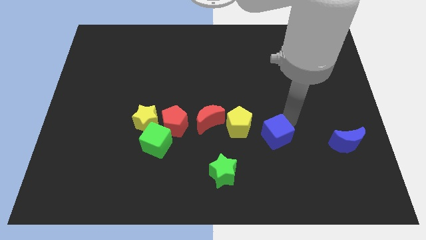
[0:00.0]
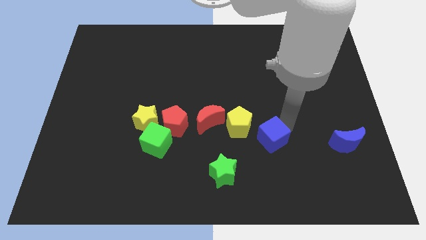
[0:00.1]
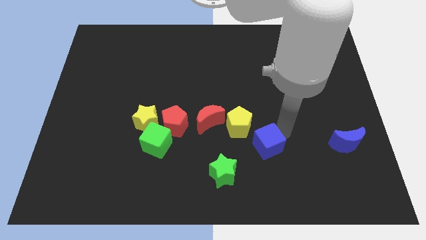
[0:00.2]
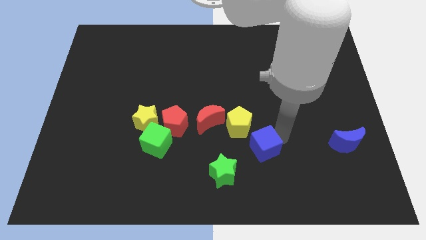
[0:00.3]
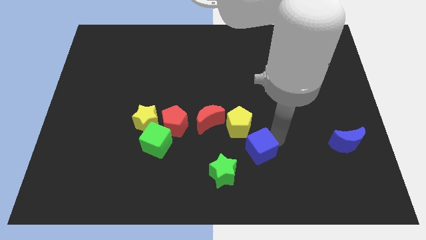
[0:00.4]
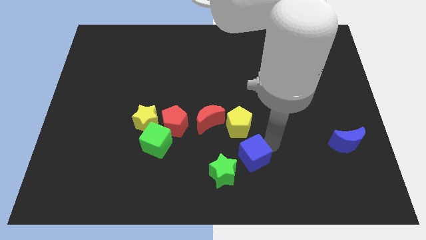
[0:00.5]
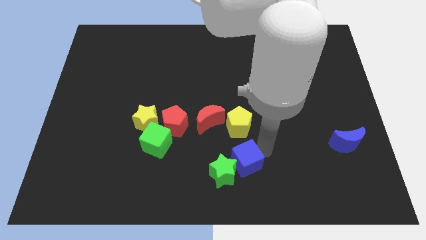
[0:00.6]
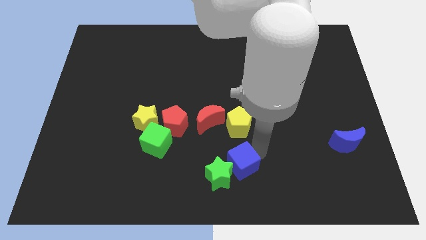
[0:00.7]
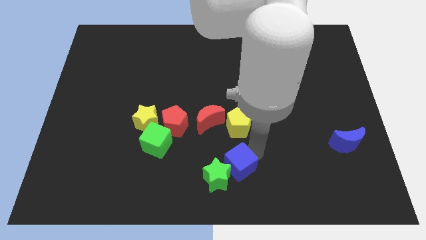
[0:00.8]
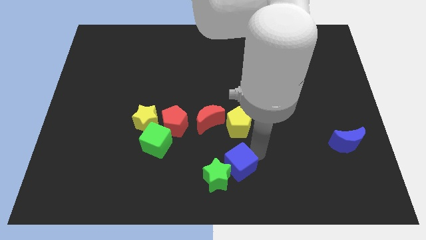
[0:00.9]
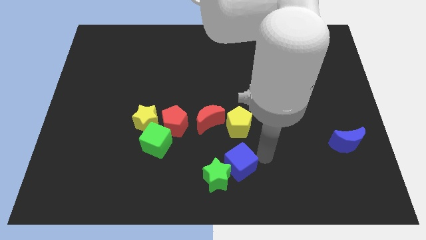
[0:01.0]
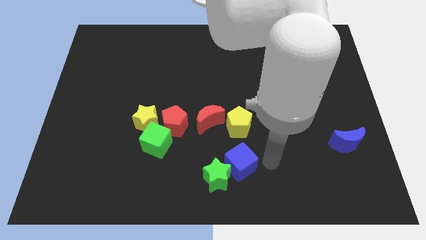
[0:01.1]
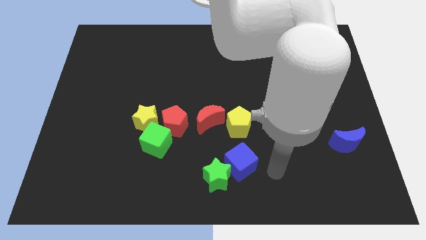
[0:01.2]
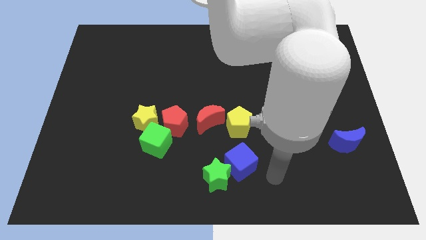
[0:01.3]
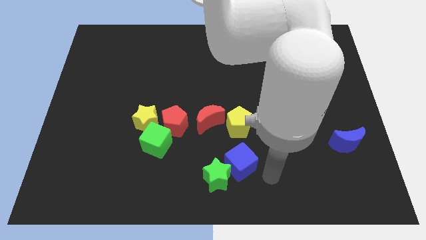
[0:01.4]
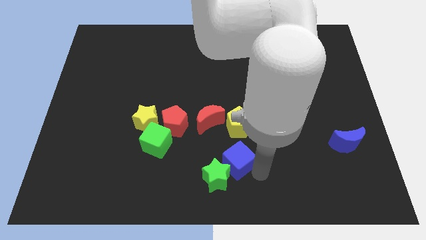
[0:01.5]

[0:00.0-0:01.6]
push the blue cube in to the green star

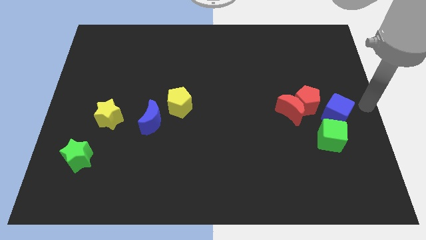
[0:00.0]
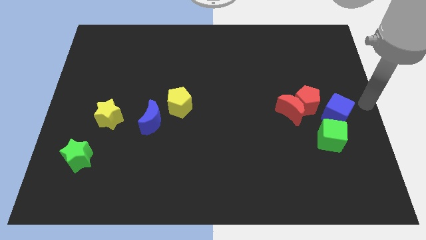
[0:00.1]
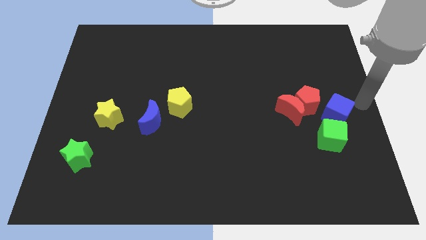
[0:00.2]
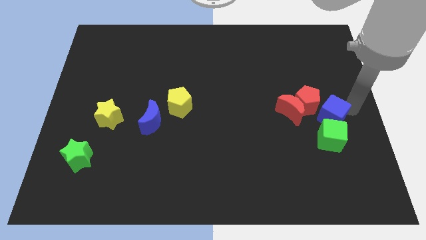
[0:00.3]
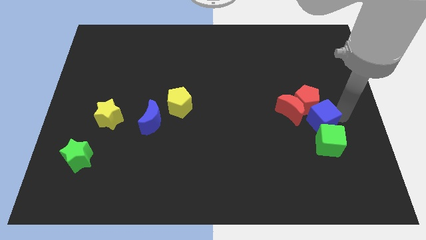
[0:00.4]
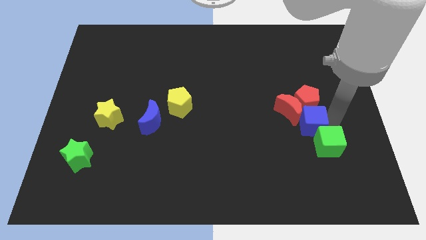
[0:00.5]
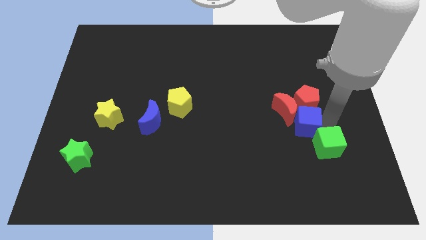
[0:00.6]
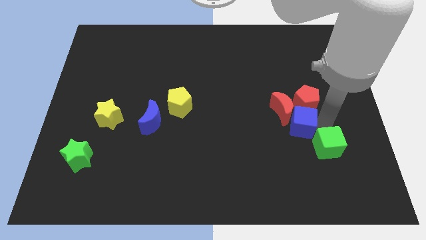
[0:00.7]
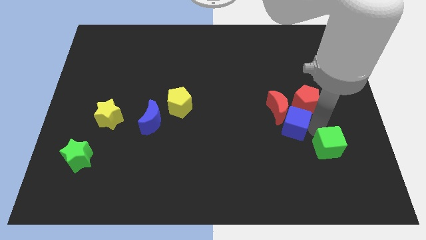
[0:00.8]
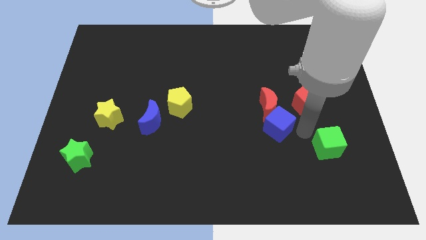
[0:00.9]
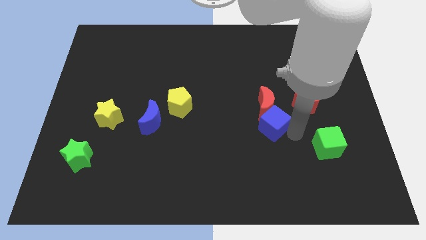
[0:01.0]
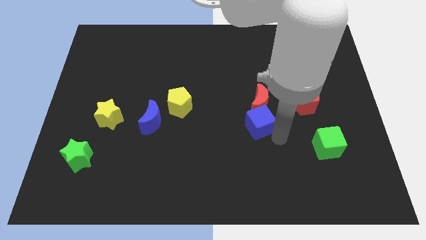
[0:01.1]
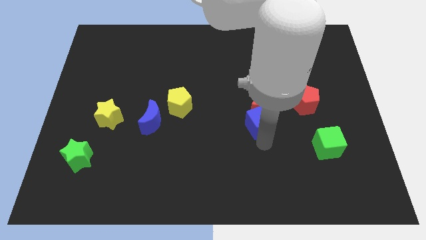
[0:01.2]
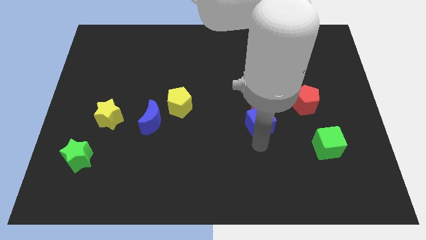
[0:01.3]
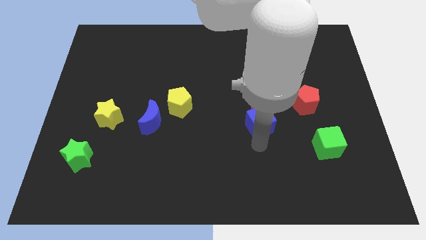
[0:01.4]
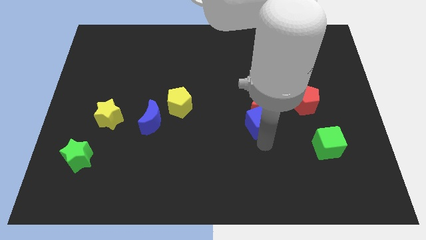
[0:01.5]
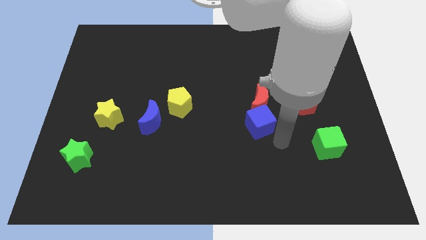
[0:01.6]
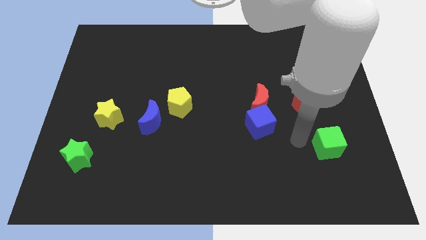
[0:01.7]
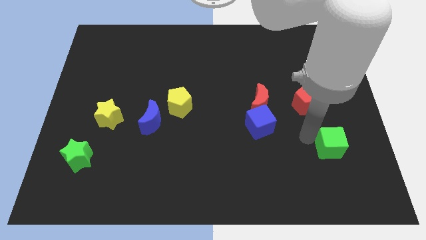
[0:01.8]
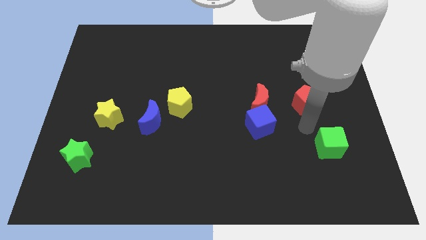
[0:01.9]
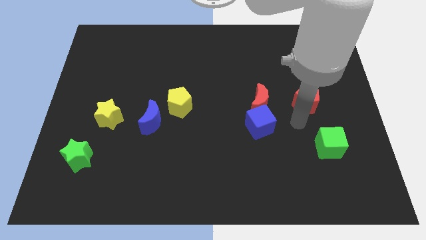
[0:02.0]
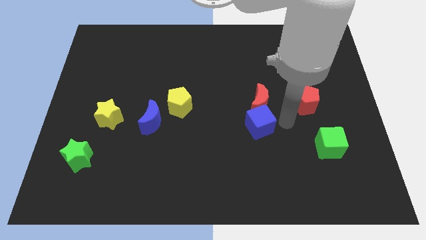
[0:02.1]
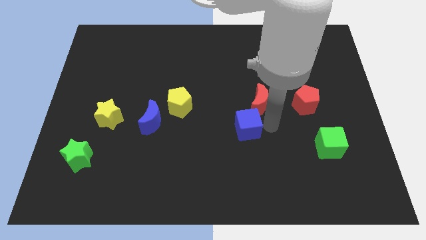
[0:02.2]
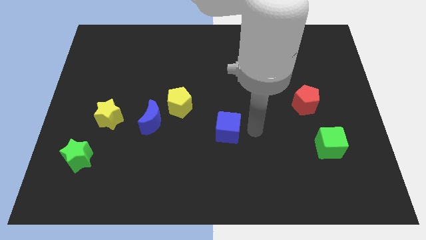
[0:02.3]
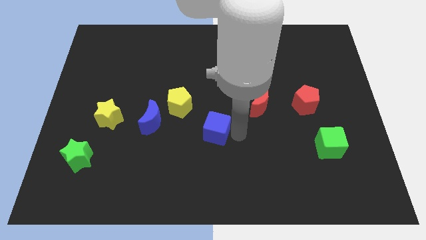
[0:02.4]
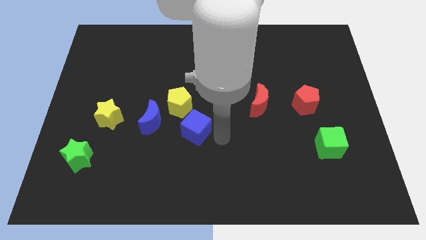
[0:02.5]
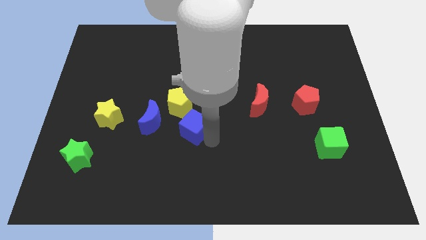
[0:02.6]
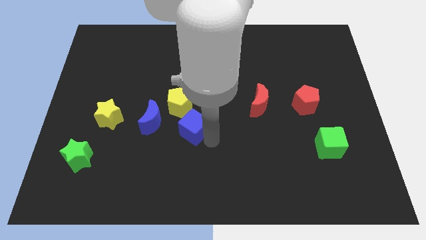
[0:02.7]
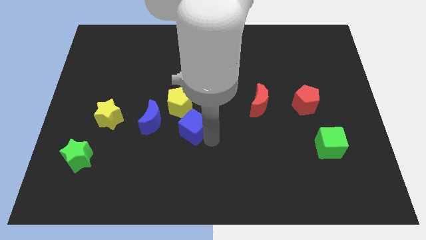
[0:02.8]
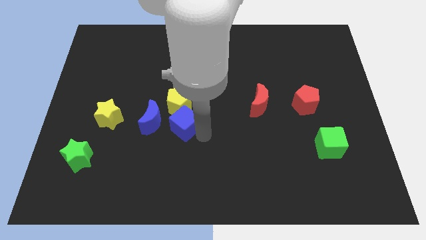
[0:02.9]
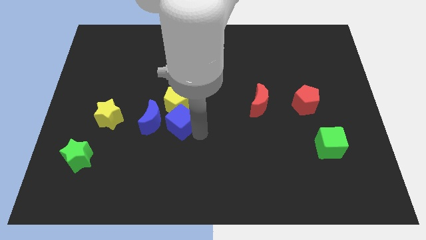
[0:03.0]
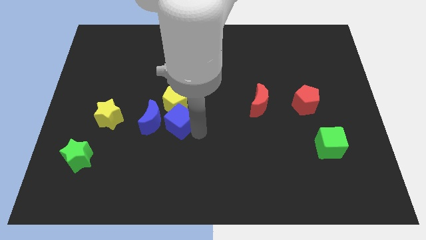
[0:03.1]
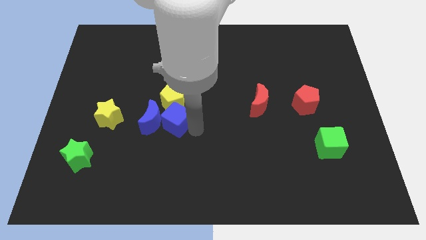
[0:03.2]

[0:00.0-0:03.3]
place the blue cube under the yellow pentagon

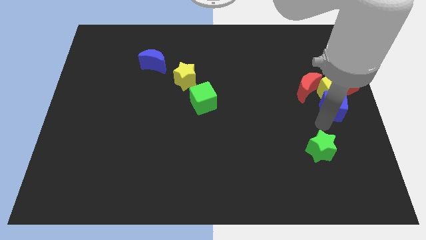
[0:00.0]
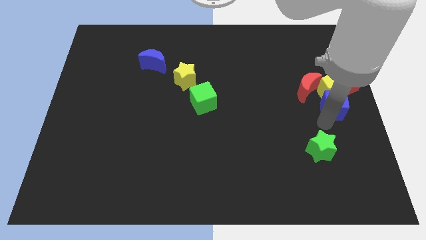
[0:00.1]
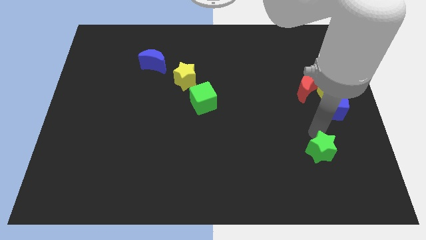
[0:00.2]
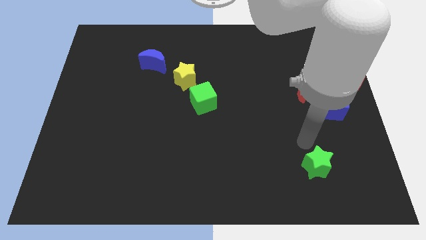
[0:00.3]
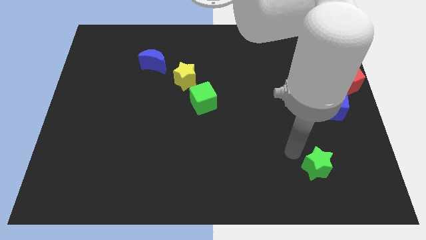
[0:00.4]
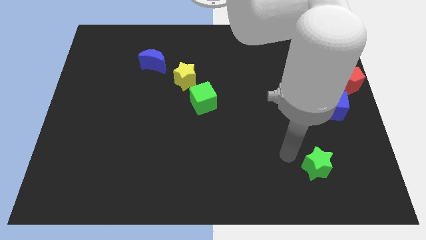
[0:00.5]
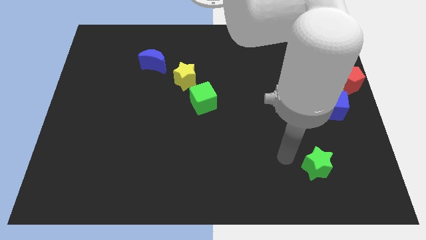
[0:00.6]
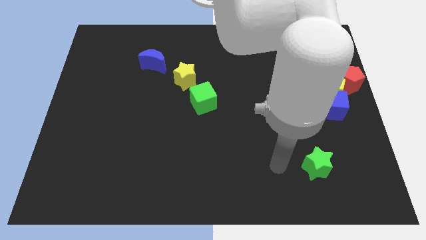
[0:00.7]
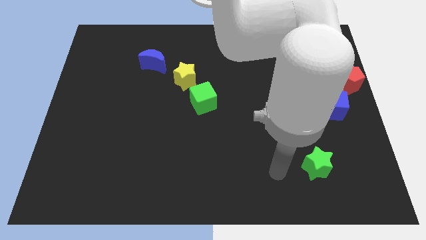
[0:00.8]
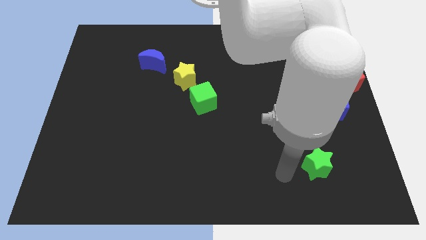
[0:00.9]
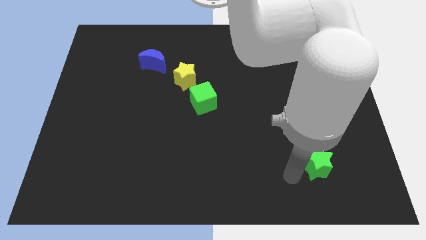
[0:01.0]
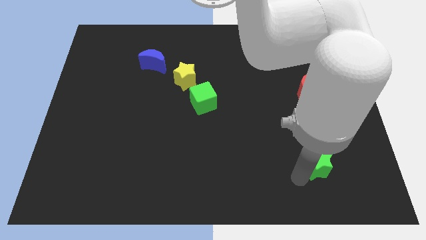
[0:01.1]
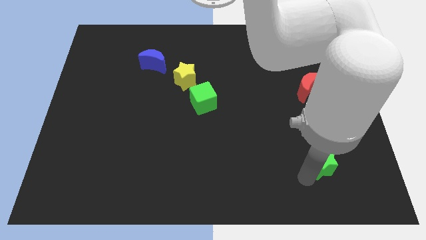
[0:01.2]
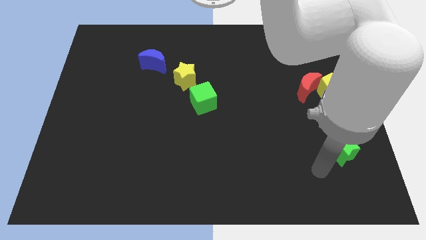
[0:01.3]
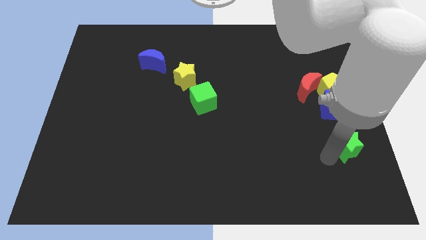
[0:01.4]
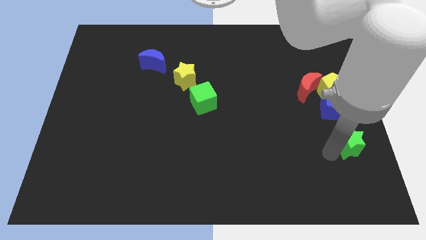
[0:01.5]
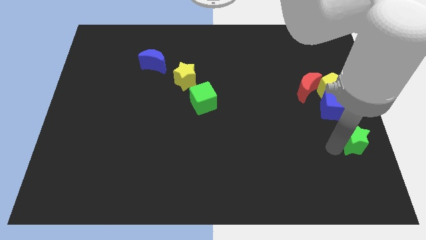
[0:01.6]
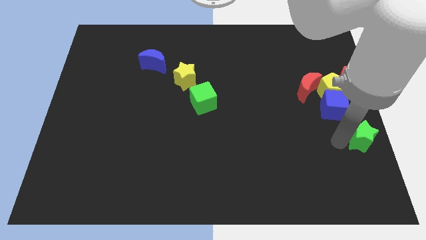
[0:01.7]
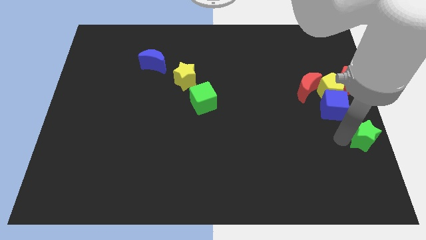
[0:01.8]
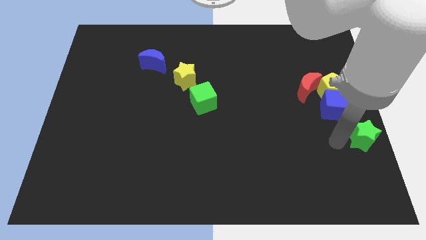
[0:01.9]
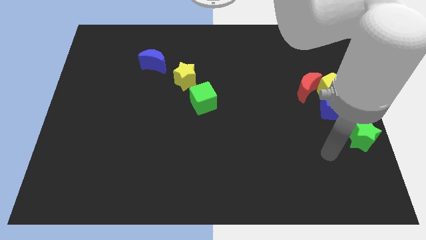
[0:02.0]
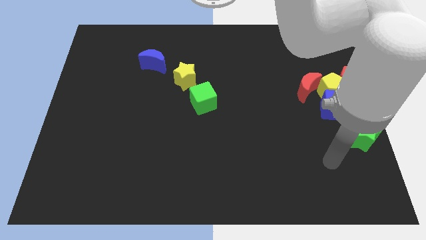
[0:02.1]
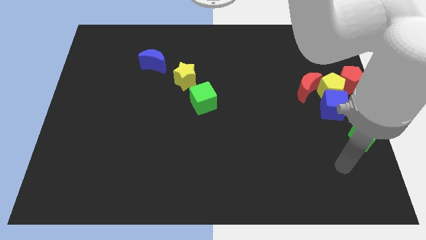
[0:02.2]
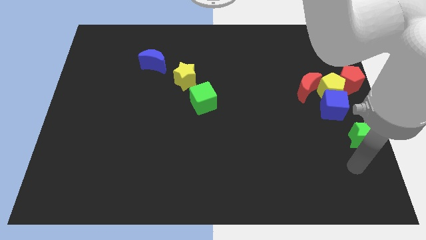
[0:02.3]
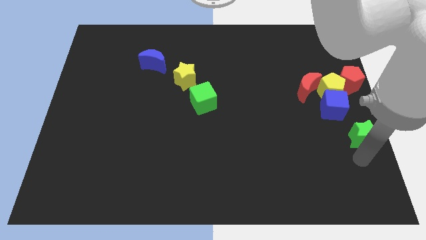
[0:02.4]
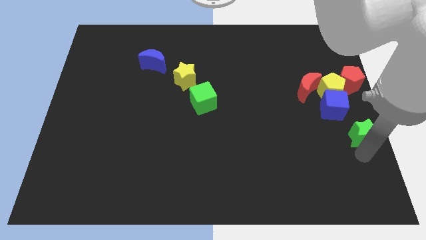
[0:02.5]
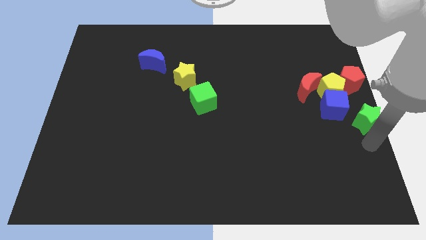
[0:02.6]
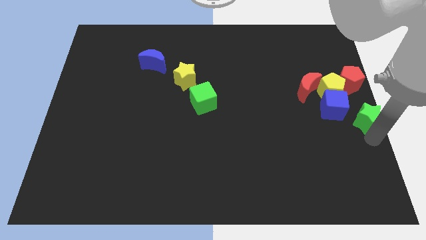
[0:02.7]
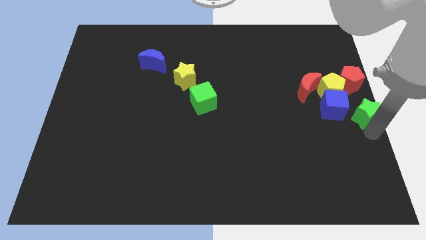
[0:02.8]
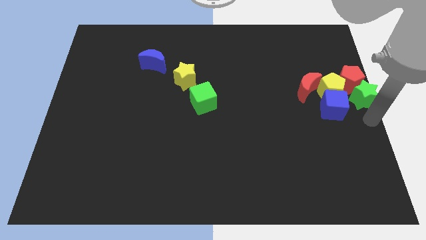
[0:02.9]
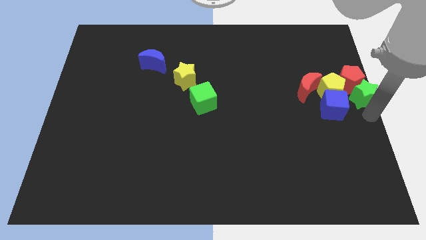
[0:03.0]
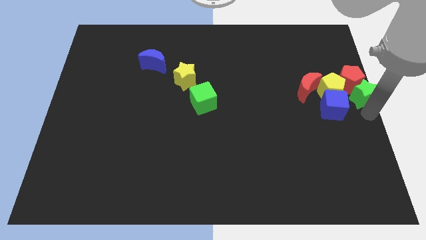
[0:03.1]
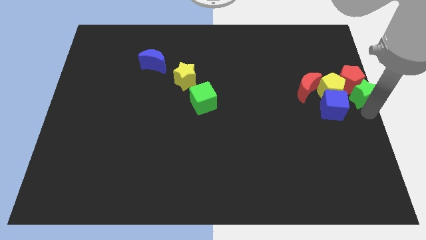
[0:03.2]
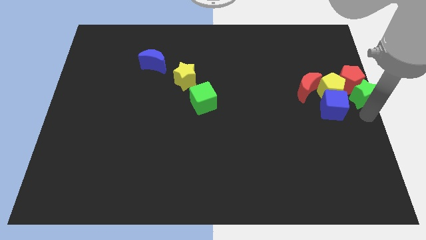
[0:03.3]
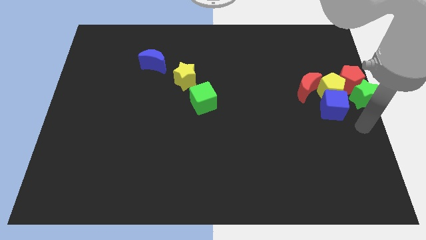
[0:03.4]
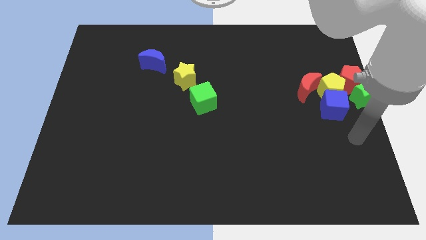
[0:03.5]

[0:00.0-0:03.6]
push the green star to the center right

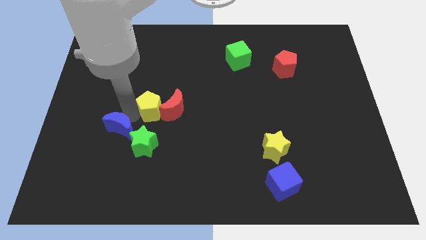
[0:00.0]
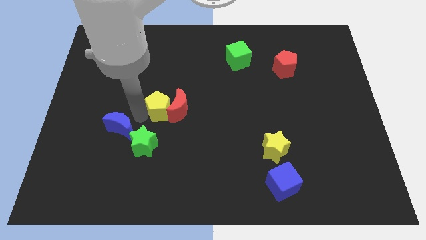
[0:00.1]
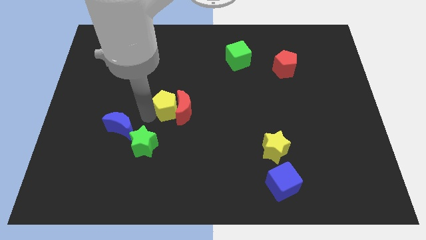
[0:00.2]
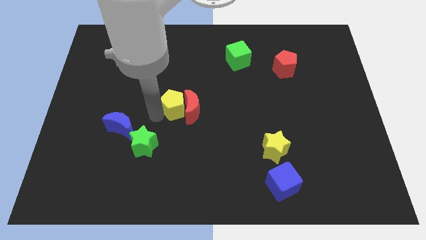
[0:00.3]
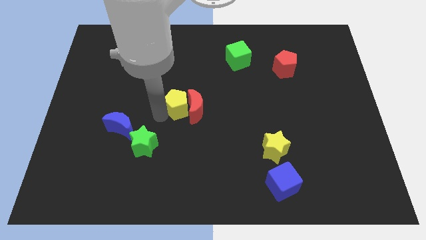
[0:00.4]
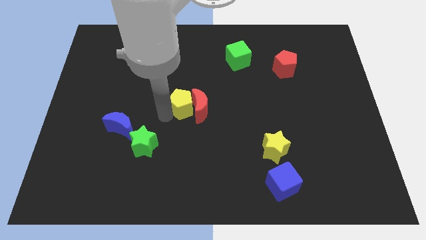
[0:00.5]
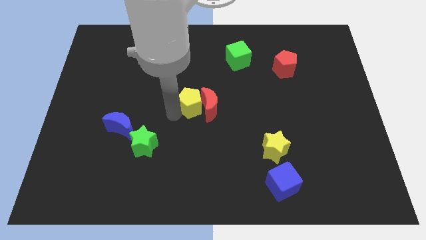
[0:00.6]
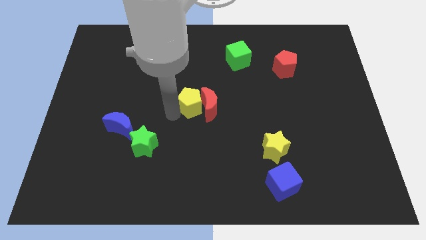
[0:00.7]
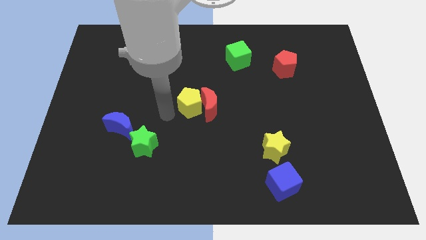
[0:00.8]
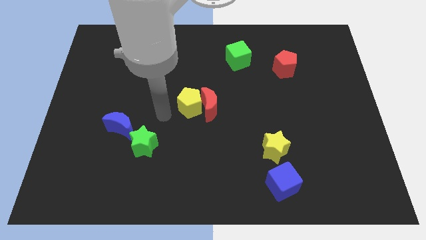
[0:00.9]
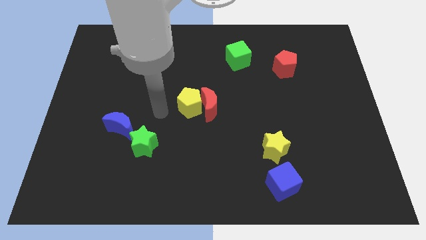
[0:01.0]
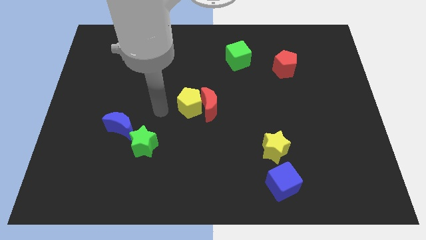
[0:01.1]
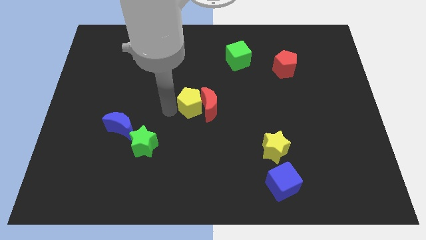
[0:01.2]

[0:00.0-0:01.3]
move the yellow pentagon along with the red crescent to the center of the board
